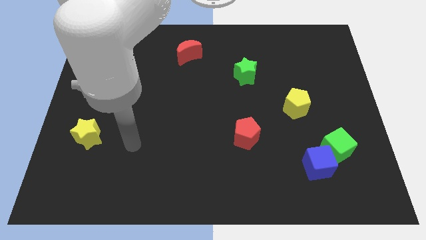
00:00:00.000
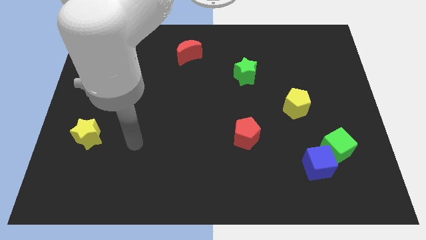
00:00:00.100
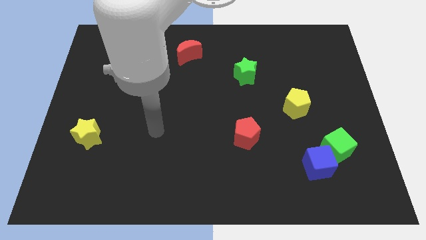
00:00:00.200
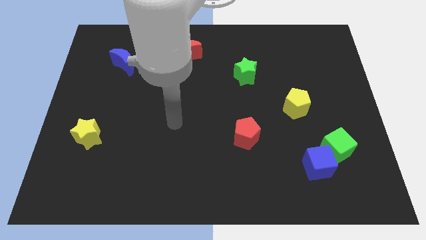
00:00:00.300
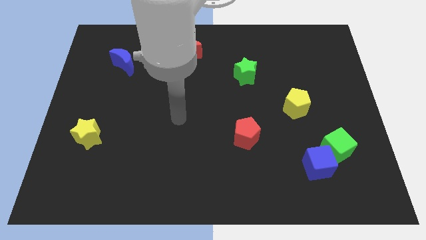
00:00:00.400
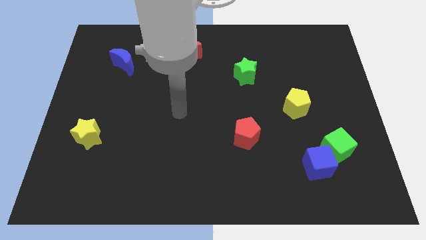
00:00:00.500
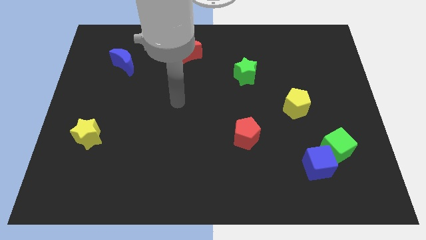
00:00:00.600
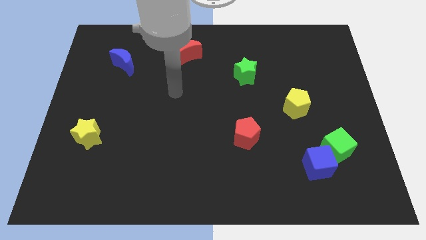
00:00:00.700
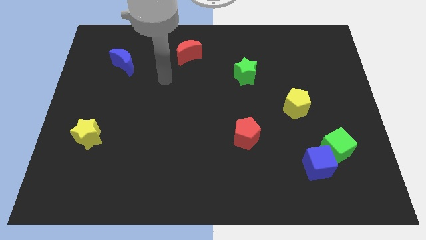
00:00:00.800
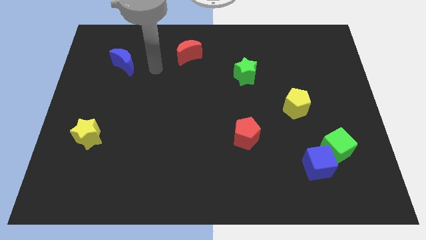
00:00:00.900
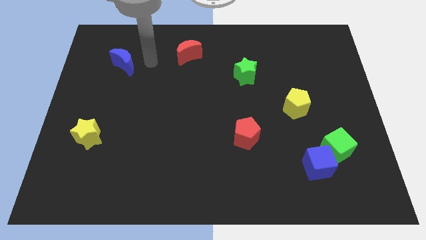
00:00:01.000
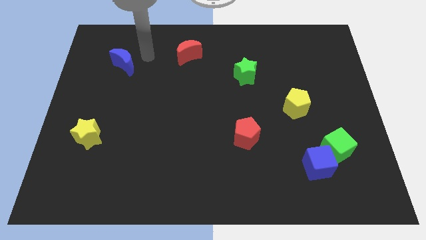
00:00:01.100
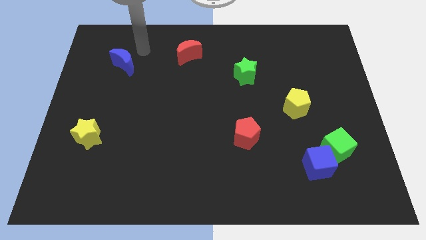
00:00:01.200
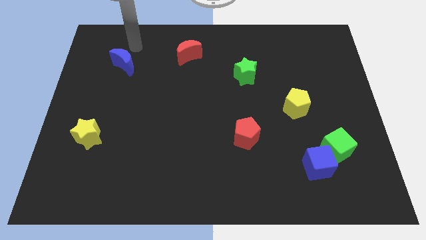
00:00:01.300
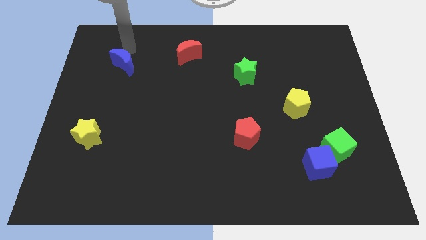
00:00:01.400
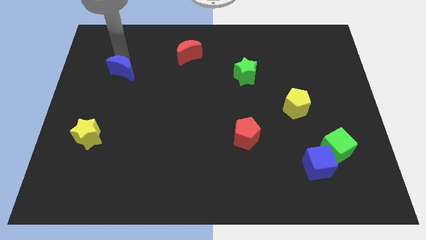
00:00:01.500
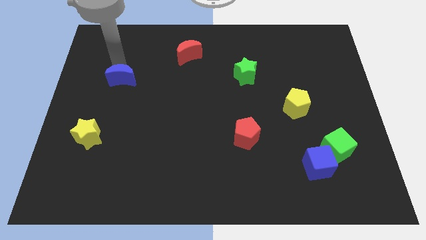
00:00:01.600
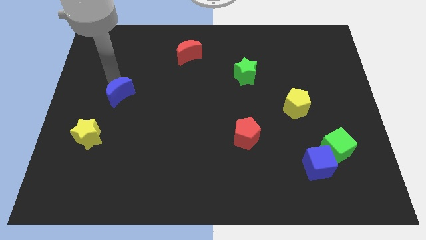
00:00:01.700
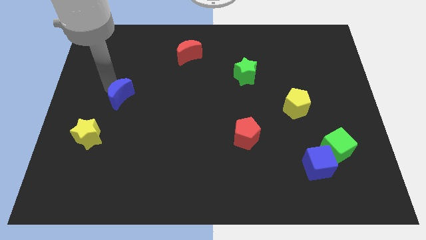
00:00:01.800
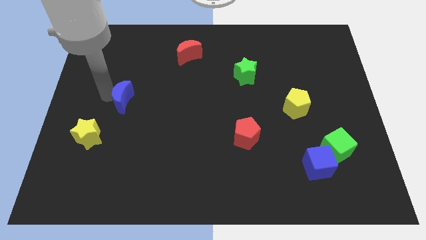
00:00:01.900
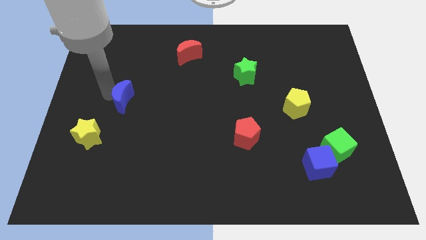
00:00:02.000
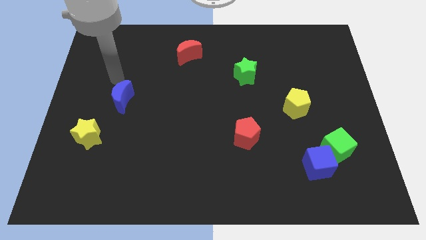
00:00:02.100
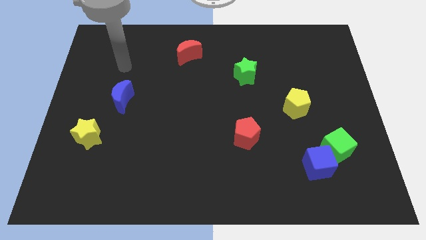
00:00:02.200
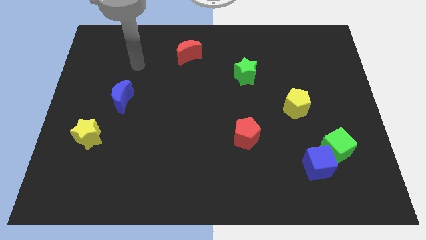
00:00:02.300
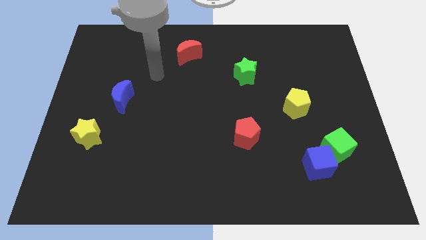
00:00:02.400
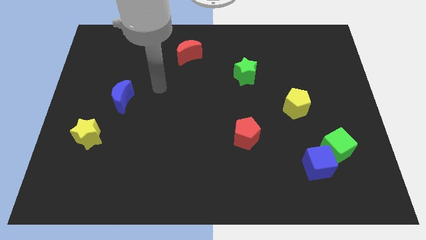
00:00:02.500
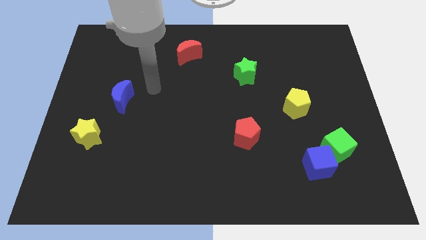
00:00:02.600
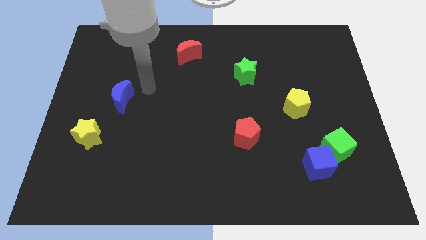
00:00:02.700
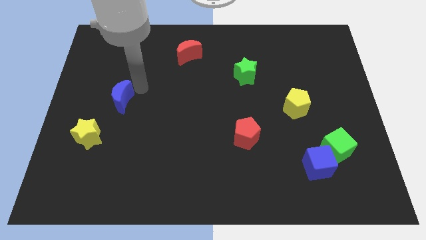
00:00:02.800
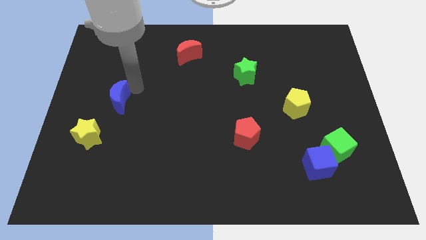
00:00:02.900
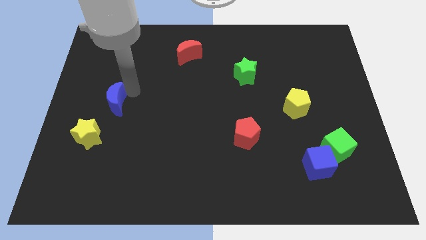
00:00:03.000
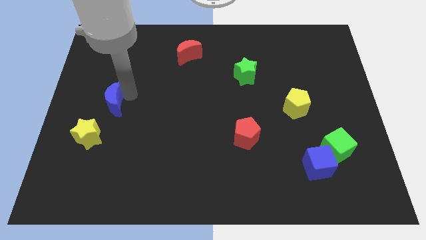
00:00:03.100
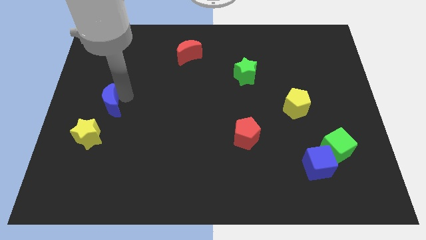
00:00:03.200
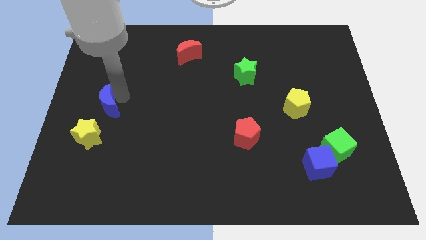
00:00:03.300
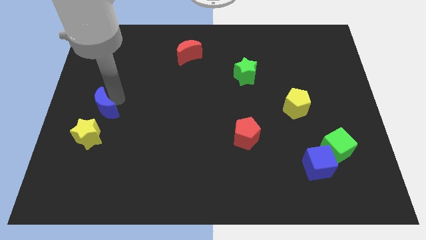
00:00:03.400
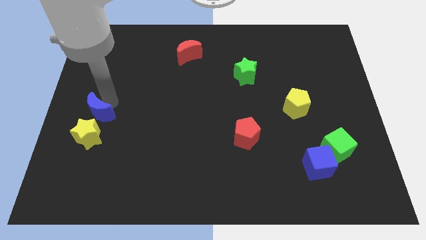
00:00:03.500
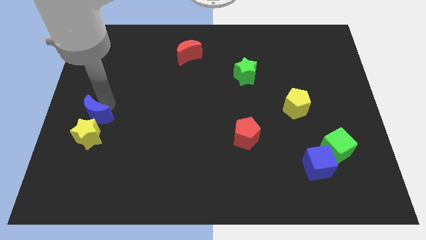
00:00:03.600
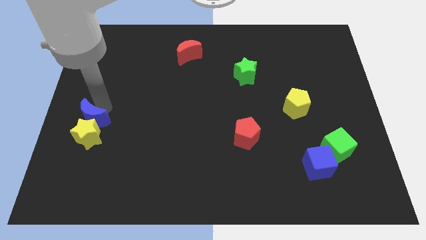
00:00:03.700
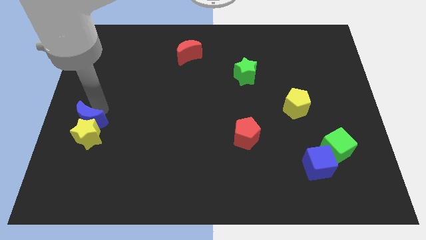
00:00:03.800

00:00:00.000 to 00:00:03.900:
put the blue moon next to the yellow star

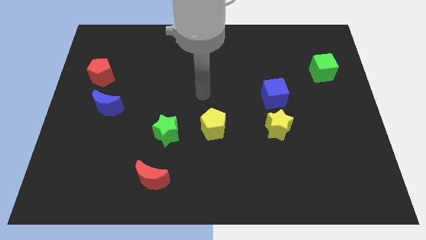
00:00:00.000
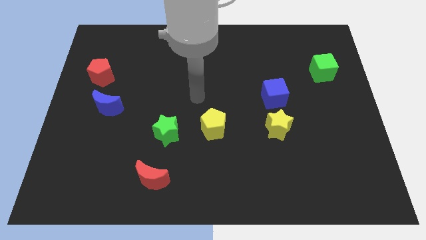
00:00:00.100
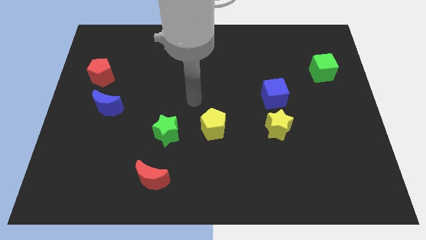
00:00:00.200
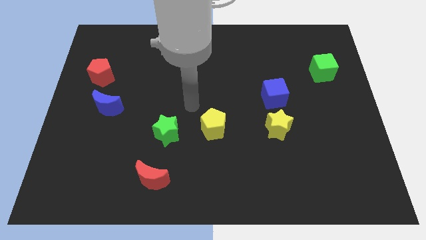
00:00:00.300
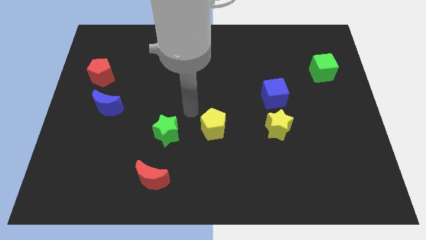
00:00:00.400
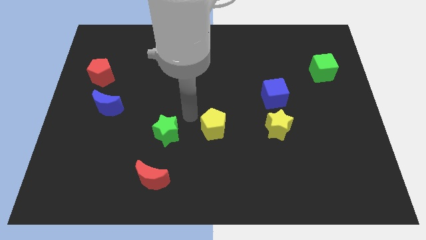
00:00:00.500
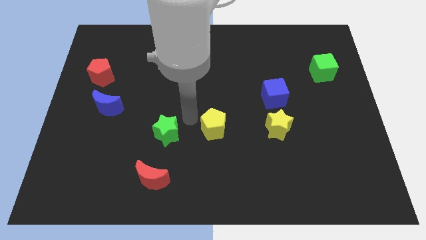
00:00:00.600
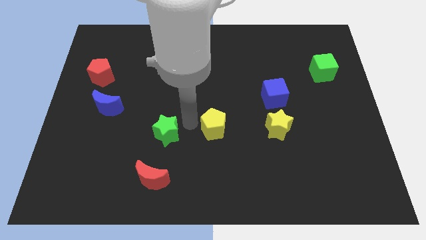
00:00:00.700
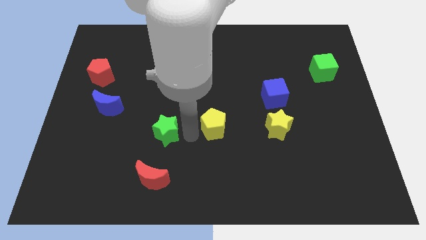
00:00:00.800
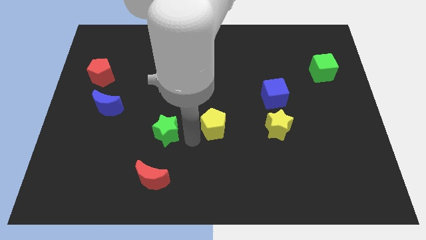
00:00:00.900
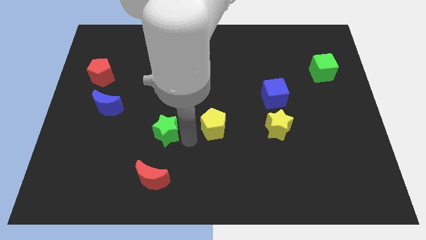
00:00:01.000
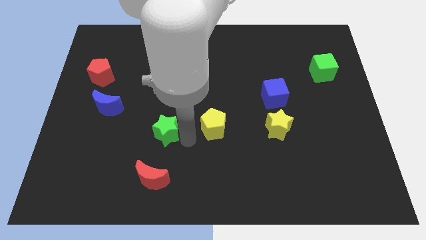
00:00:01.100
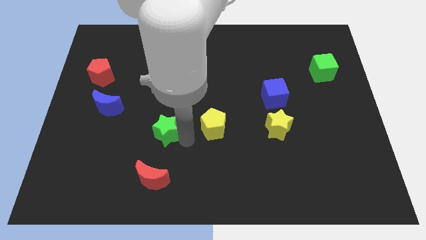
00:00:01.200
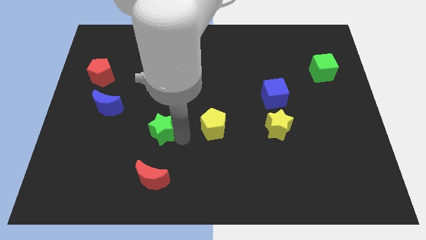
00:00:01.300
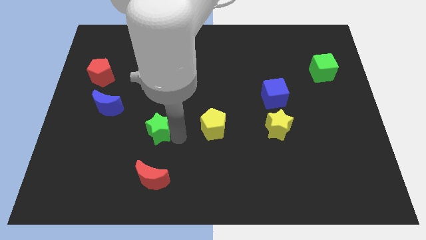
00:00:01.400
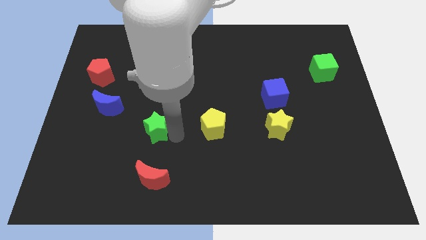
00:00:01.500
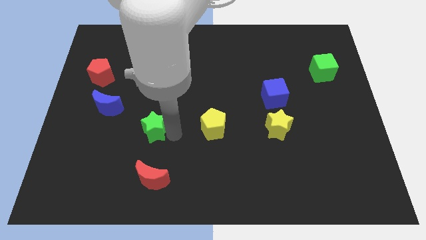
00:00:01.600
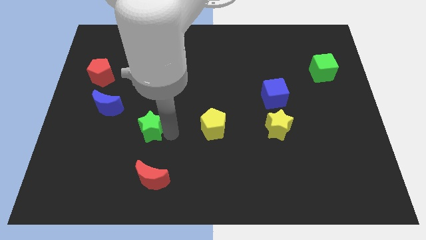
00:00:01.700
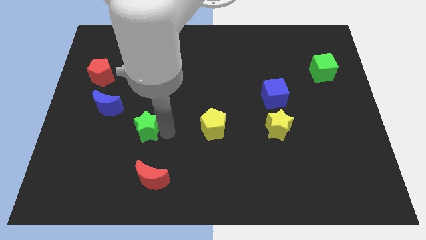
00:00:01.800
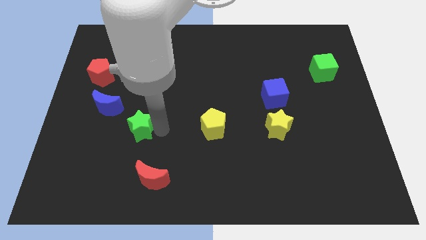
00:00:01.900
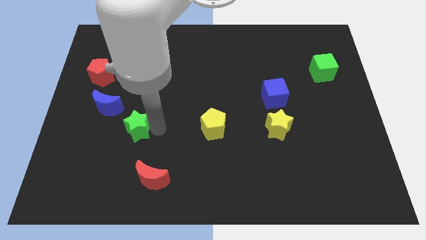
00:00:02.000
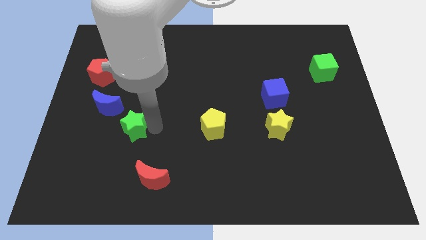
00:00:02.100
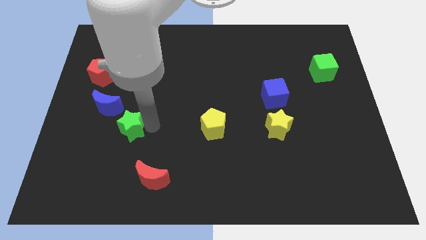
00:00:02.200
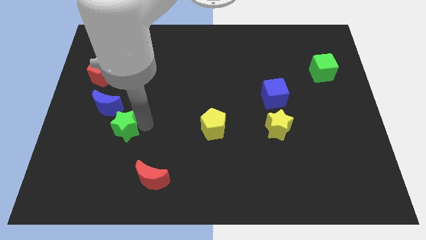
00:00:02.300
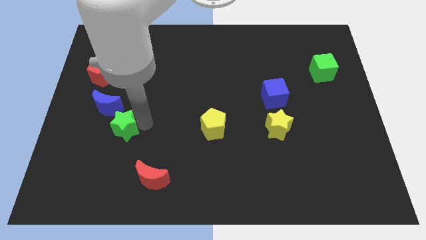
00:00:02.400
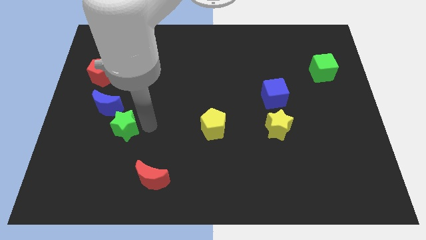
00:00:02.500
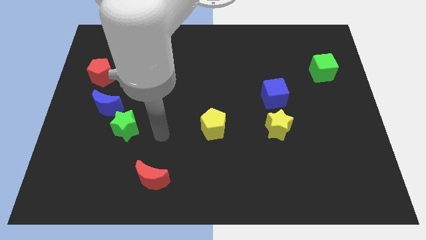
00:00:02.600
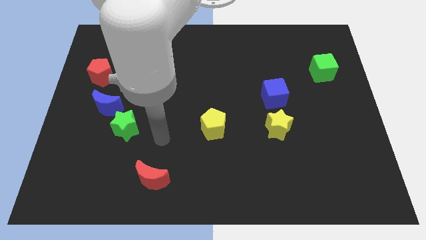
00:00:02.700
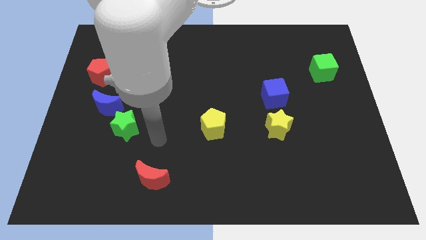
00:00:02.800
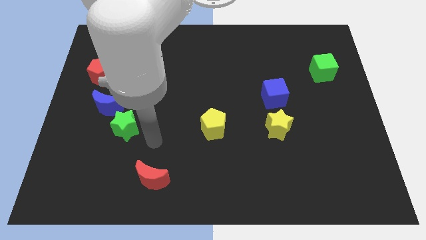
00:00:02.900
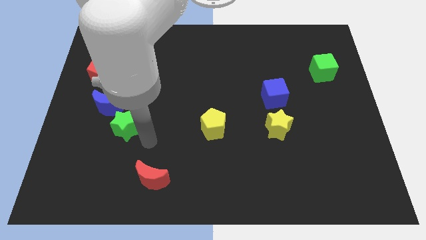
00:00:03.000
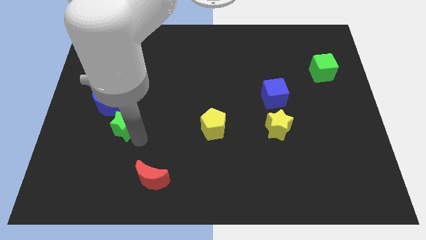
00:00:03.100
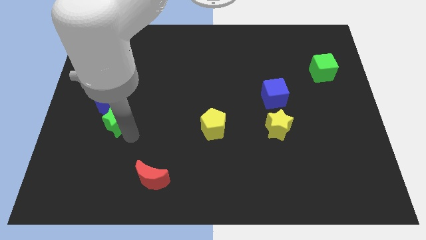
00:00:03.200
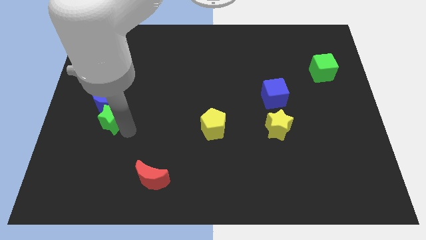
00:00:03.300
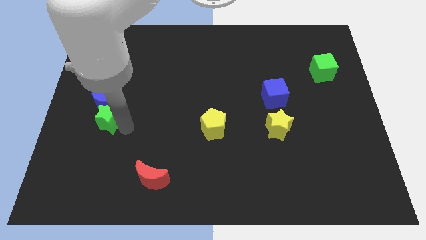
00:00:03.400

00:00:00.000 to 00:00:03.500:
push the green star next to the blue moon

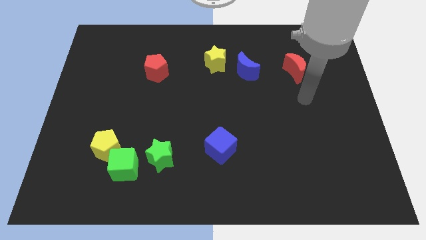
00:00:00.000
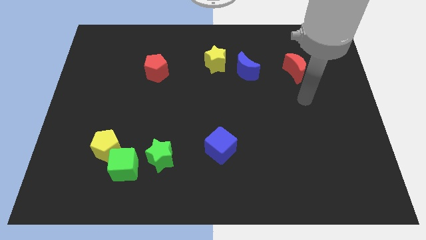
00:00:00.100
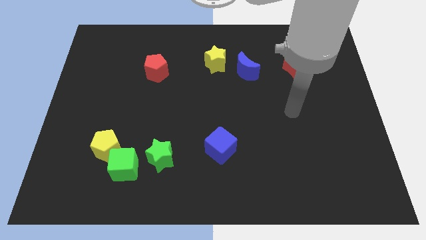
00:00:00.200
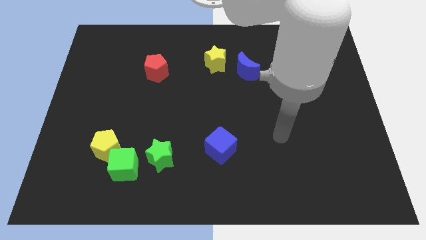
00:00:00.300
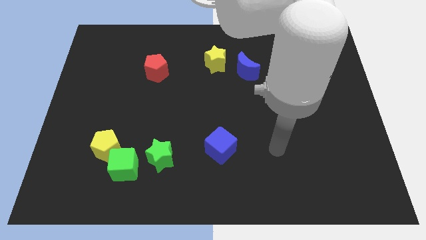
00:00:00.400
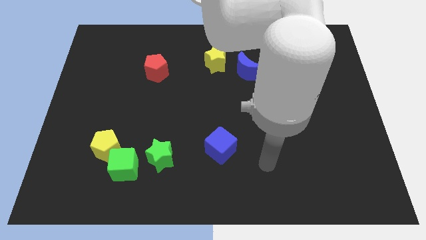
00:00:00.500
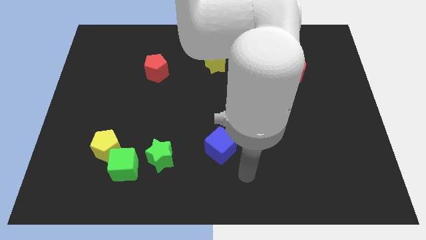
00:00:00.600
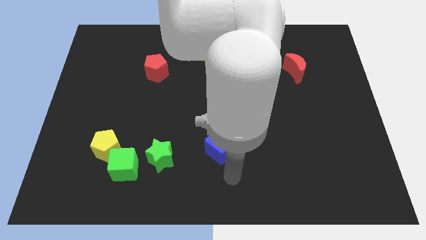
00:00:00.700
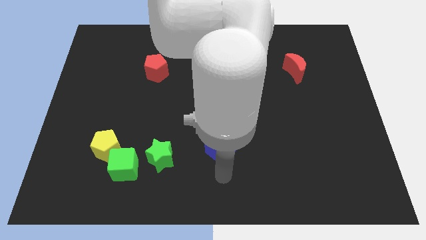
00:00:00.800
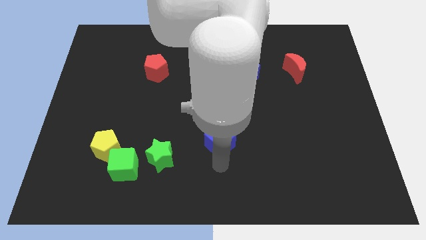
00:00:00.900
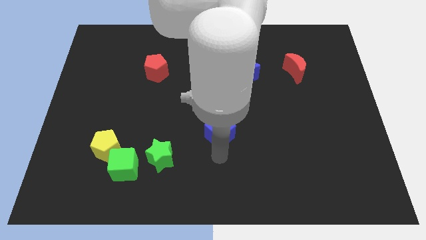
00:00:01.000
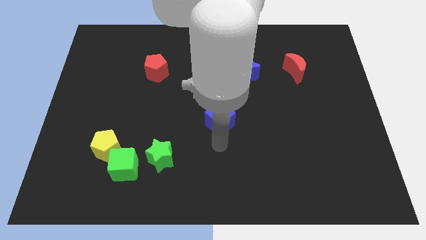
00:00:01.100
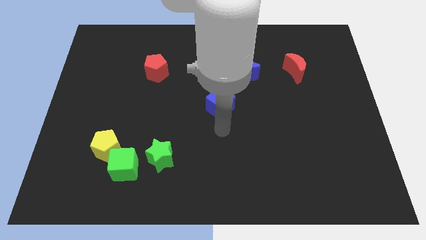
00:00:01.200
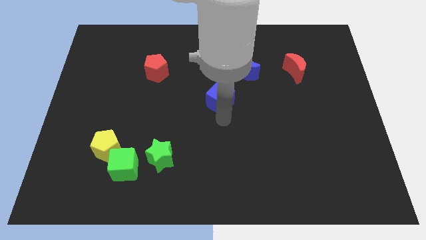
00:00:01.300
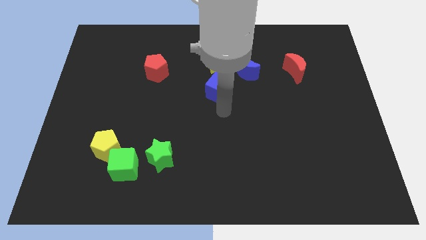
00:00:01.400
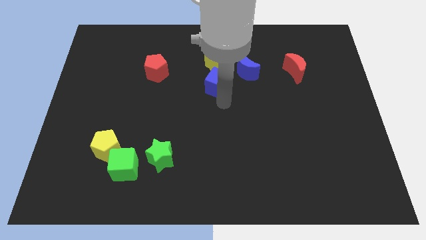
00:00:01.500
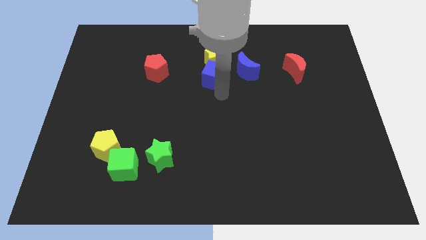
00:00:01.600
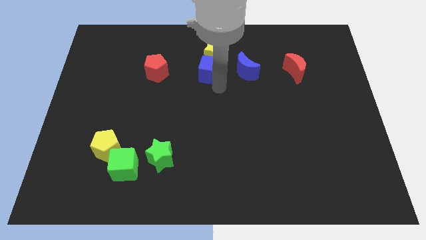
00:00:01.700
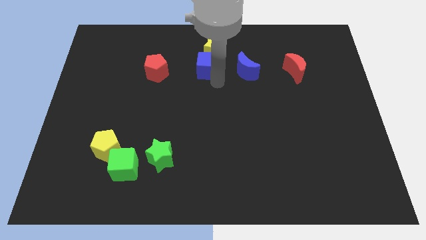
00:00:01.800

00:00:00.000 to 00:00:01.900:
move the blue cube towards the yellow star
